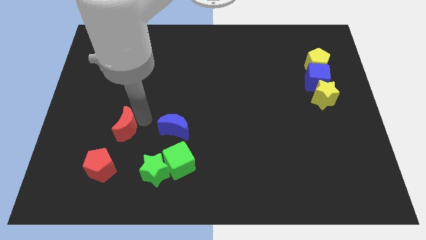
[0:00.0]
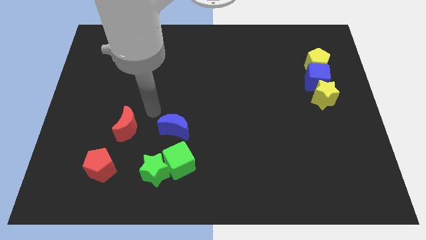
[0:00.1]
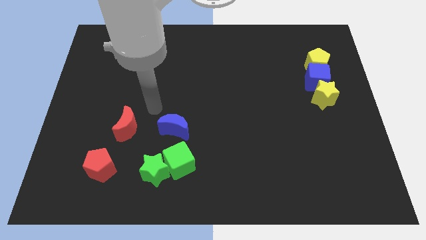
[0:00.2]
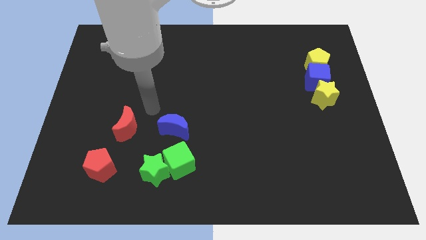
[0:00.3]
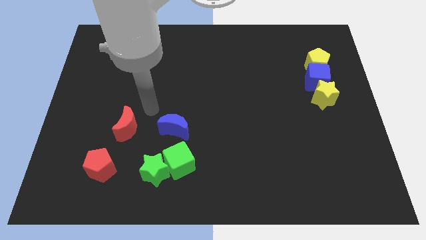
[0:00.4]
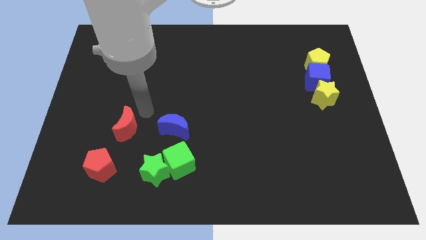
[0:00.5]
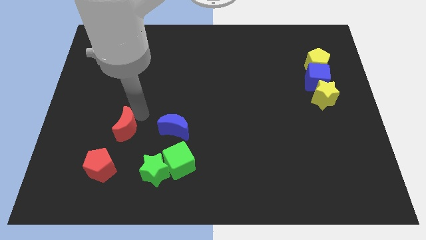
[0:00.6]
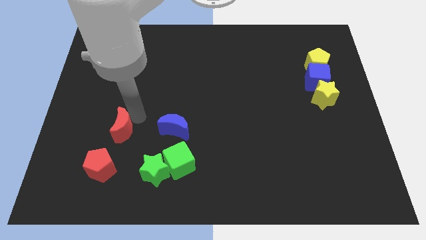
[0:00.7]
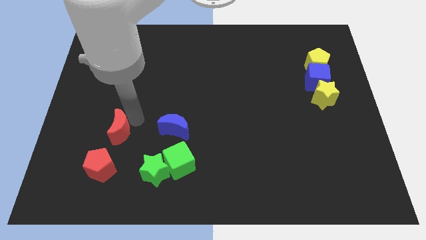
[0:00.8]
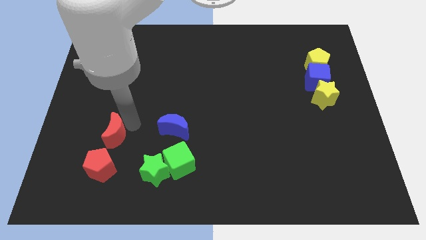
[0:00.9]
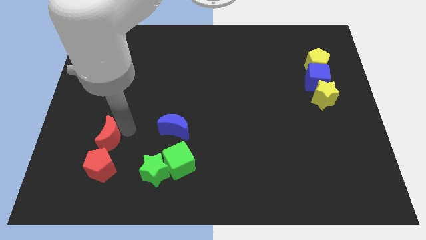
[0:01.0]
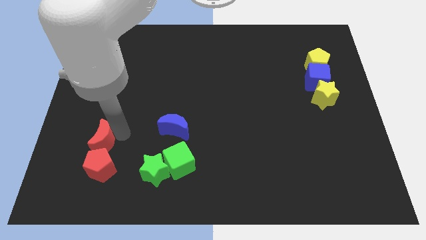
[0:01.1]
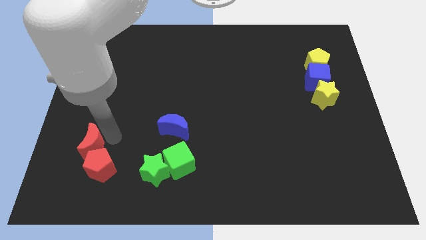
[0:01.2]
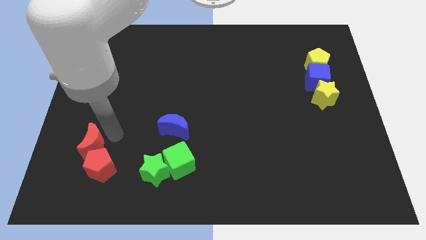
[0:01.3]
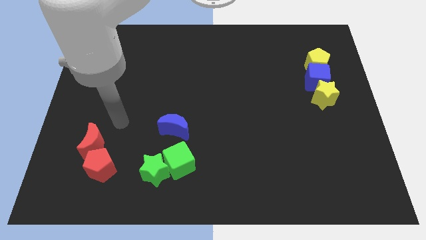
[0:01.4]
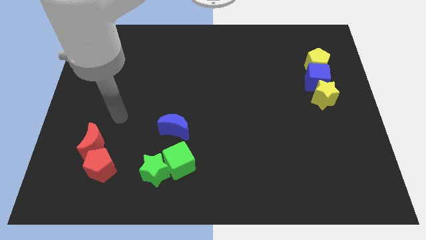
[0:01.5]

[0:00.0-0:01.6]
place the red crescent above the red pentagon

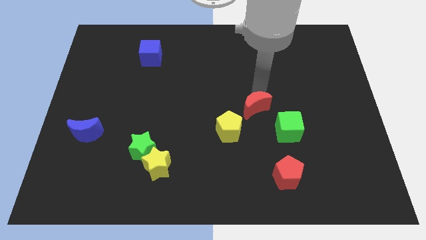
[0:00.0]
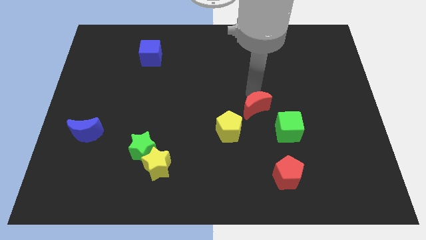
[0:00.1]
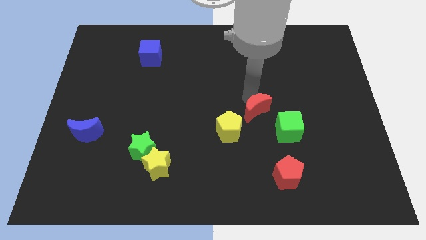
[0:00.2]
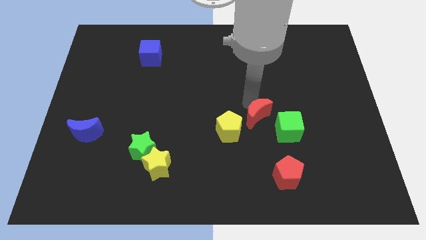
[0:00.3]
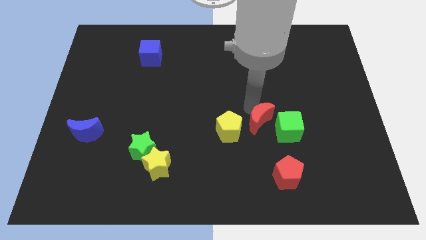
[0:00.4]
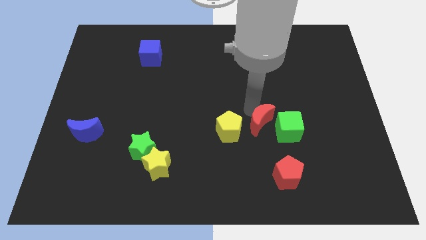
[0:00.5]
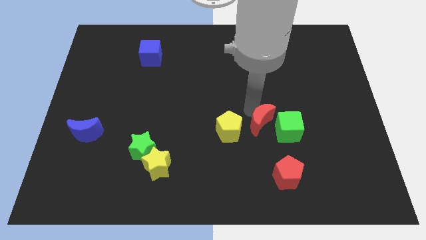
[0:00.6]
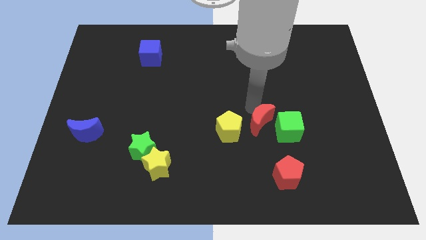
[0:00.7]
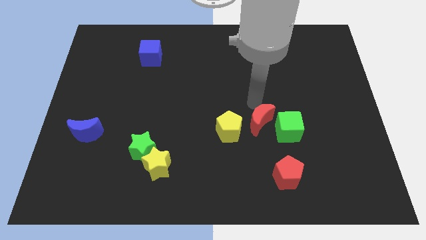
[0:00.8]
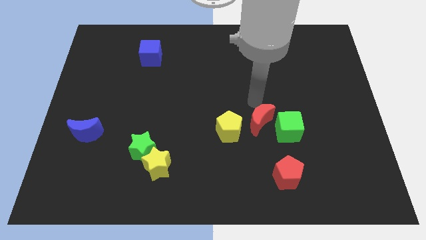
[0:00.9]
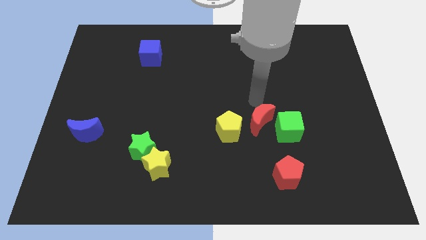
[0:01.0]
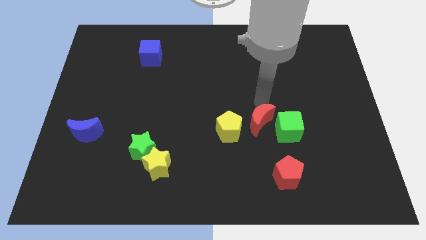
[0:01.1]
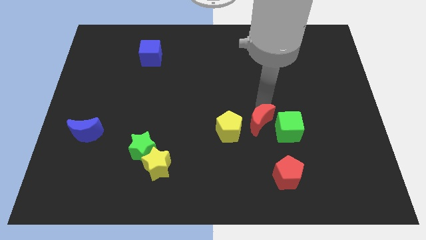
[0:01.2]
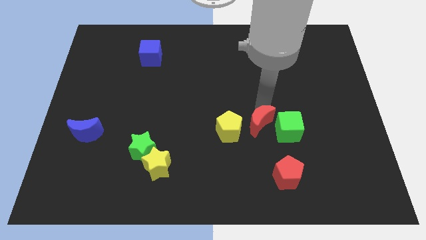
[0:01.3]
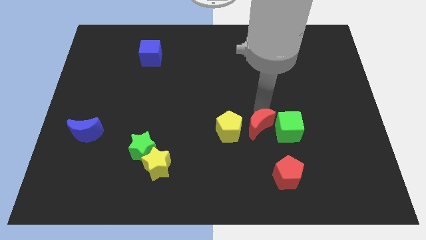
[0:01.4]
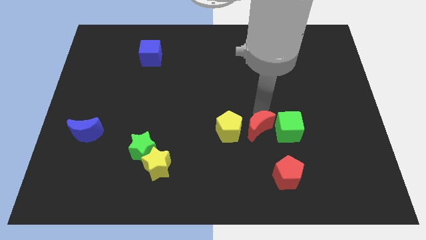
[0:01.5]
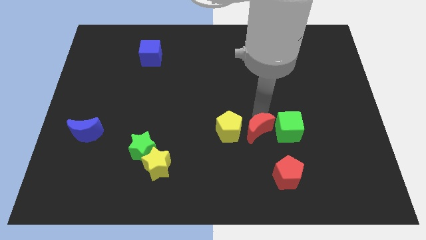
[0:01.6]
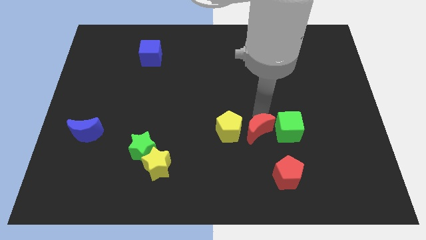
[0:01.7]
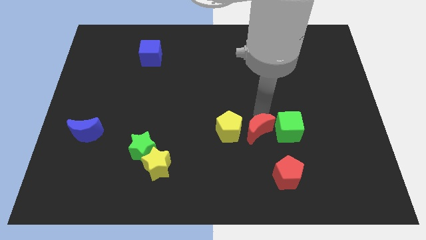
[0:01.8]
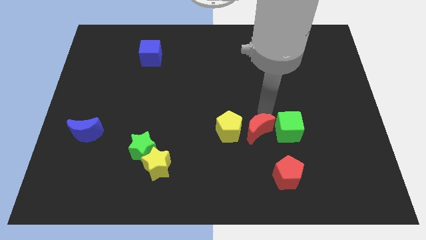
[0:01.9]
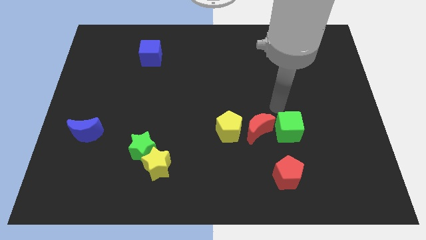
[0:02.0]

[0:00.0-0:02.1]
push the red moon between the green cube and yellow pentagon

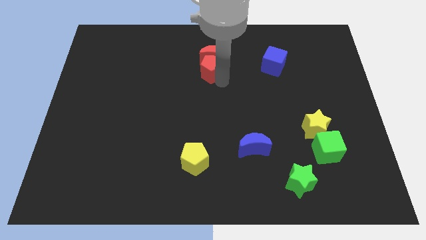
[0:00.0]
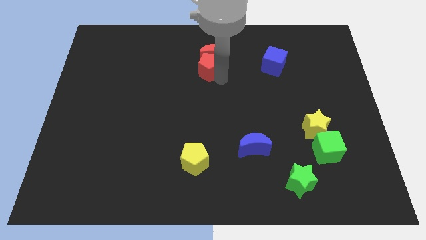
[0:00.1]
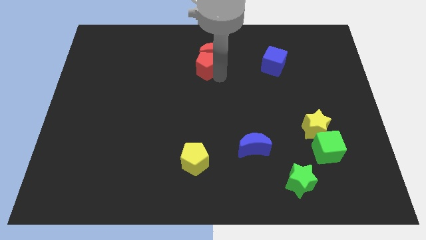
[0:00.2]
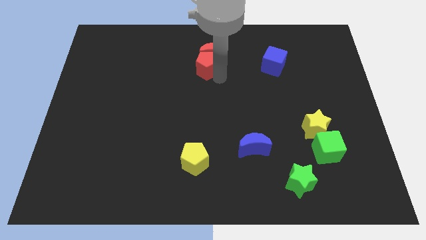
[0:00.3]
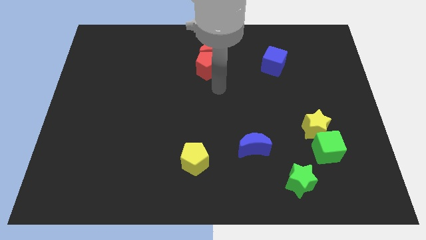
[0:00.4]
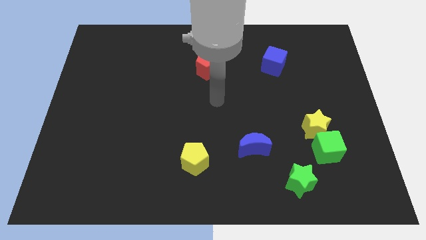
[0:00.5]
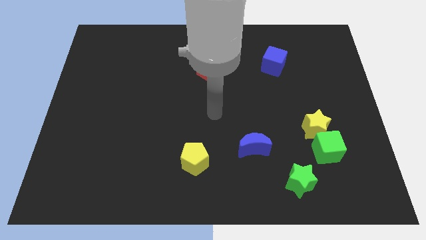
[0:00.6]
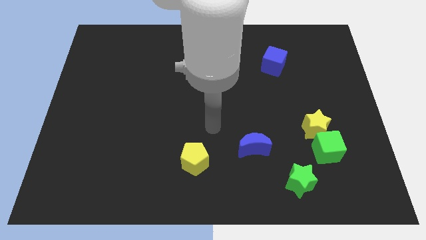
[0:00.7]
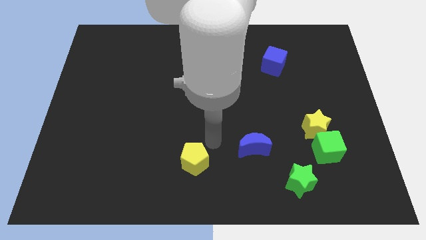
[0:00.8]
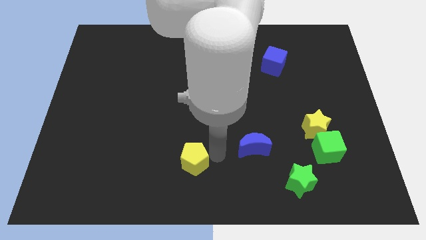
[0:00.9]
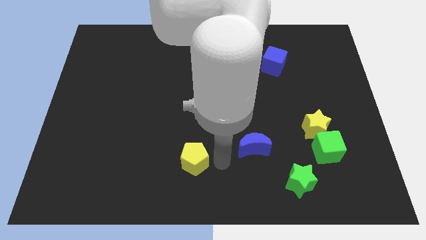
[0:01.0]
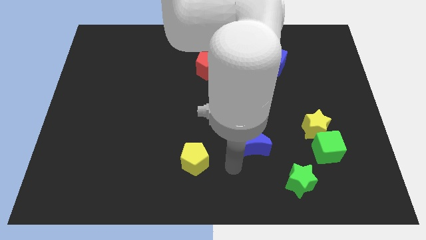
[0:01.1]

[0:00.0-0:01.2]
move your hand in between the yellow pentagon and blue crescent

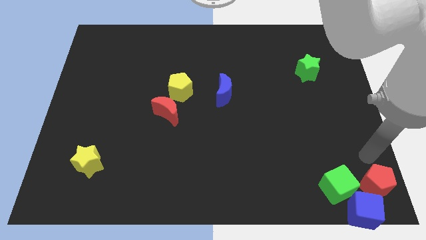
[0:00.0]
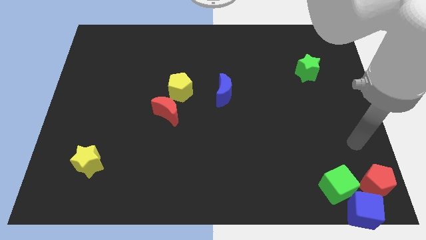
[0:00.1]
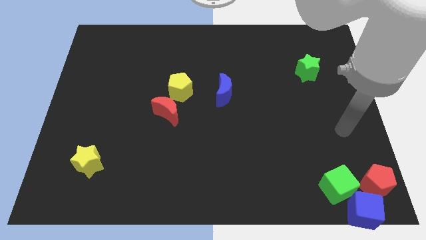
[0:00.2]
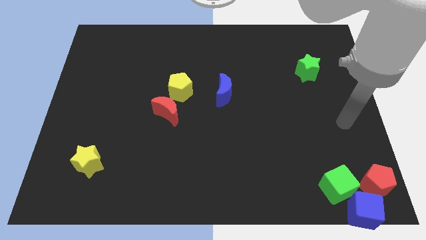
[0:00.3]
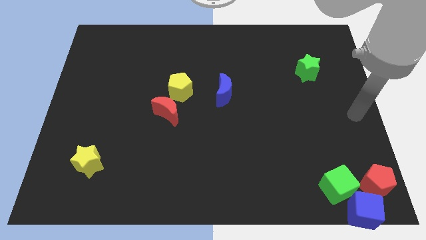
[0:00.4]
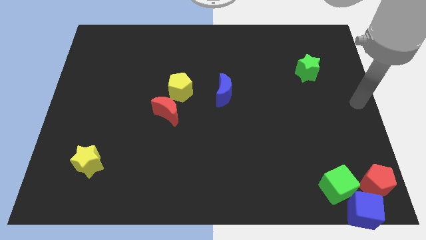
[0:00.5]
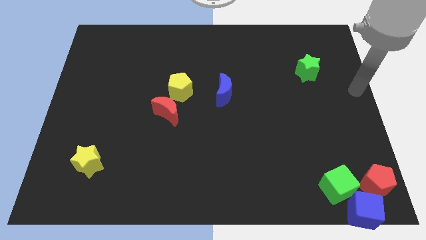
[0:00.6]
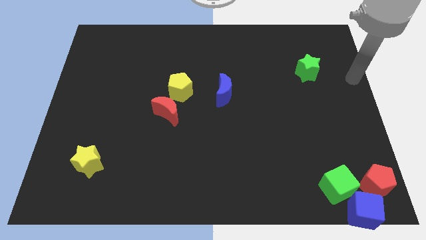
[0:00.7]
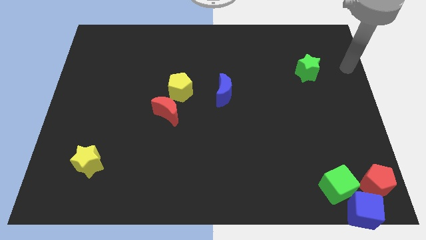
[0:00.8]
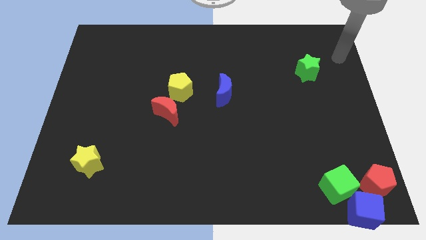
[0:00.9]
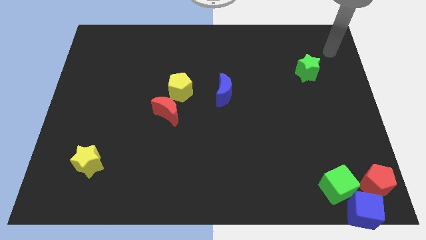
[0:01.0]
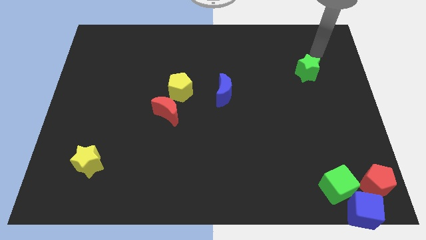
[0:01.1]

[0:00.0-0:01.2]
move your arm away from red pentagon

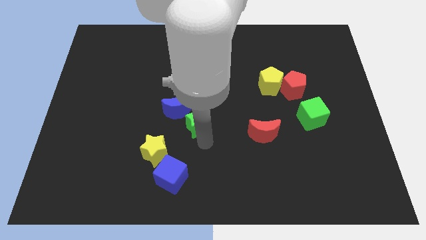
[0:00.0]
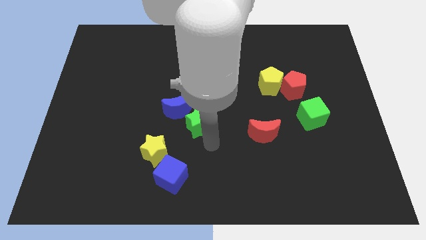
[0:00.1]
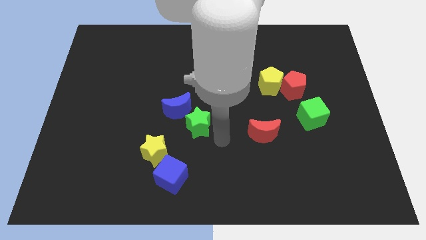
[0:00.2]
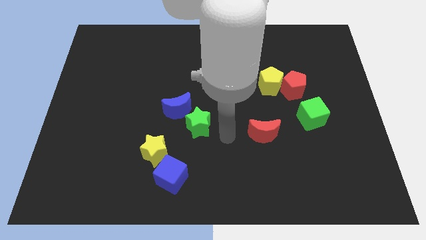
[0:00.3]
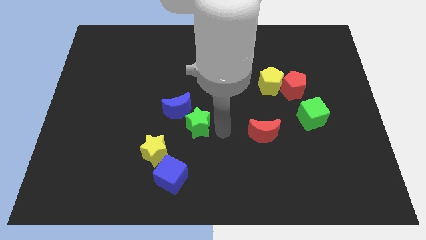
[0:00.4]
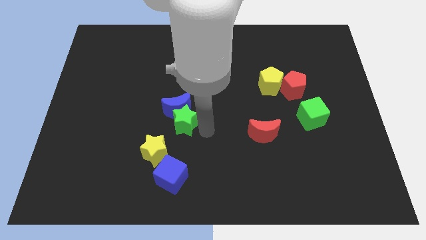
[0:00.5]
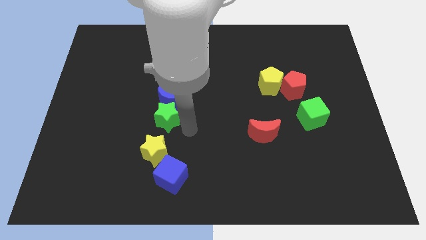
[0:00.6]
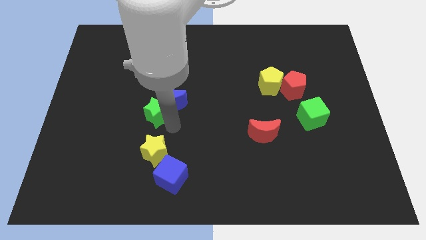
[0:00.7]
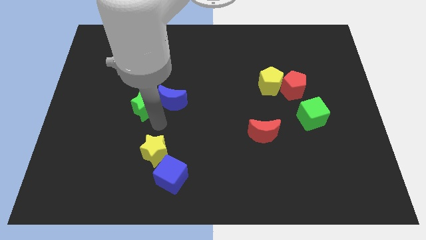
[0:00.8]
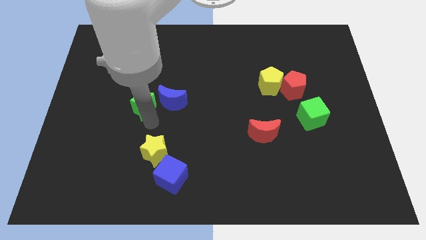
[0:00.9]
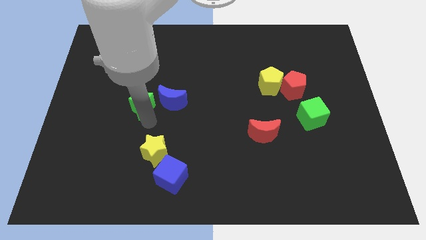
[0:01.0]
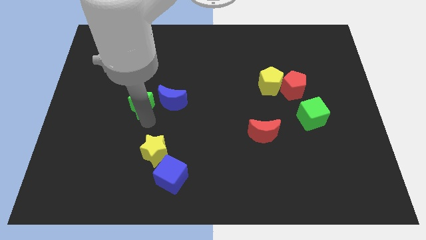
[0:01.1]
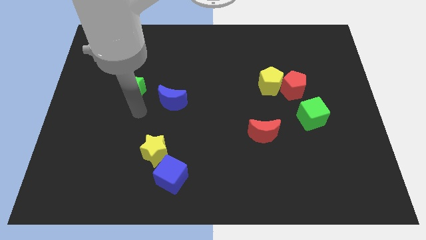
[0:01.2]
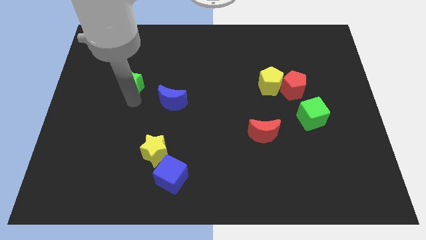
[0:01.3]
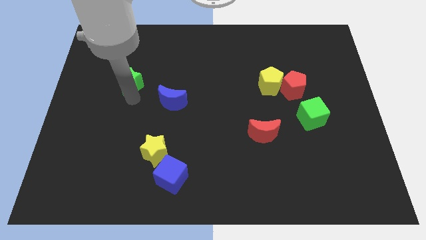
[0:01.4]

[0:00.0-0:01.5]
move the green star at the left side of the blue crescent

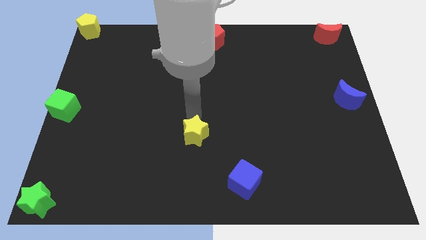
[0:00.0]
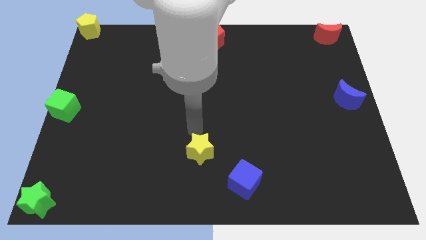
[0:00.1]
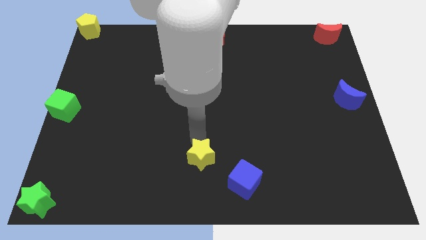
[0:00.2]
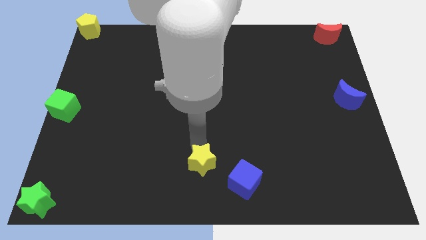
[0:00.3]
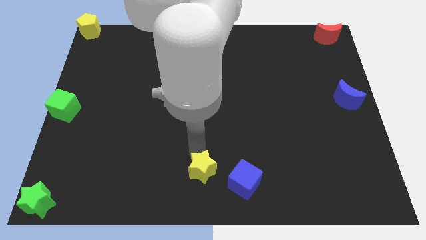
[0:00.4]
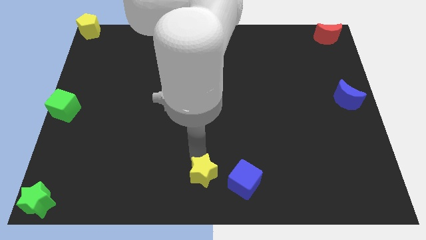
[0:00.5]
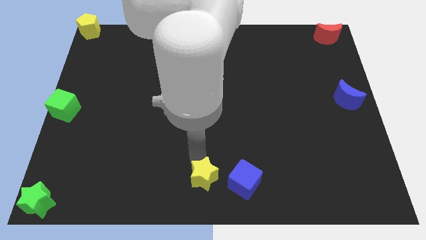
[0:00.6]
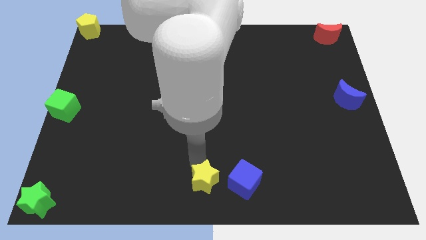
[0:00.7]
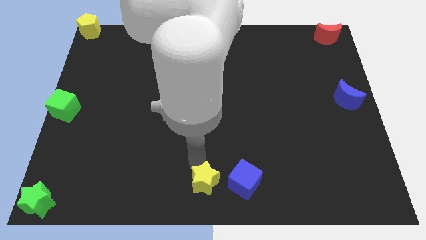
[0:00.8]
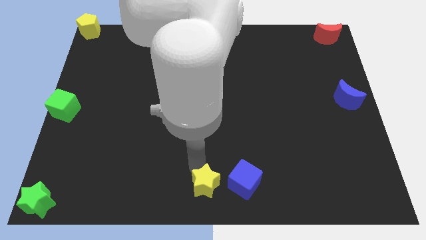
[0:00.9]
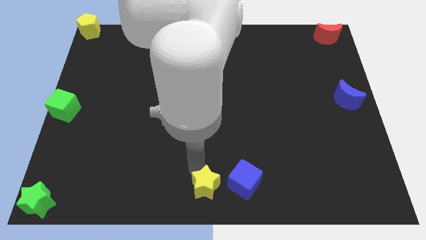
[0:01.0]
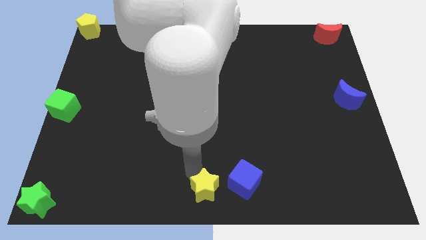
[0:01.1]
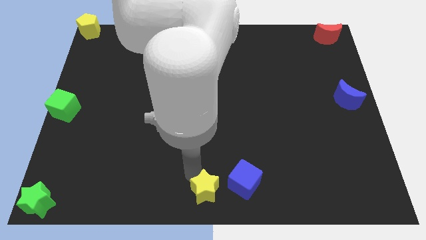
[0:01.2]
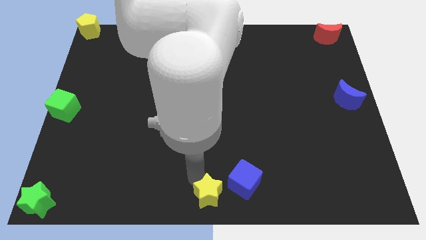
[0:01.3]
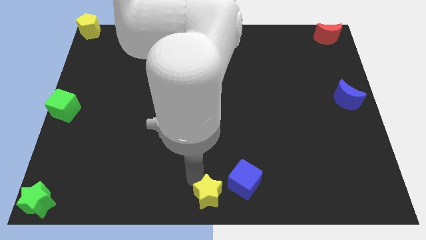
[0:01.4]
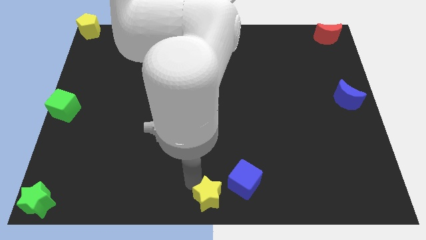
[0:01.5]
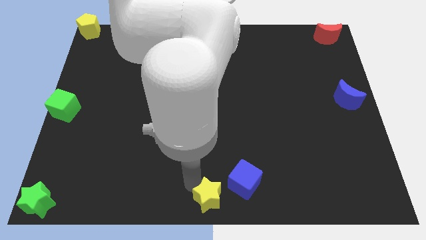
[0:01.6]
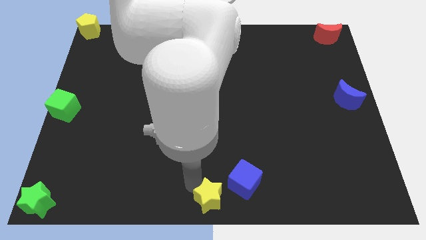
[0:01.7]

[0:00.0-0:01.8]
move the yellow star parallel to the green star
